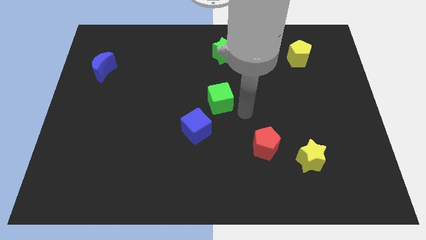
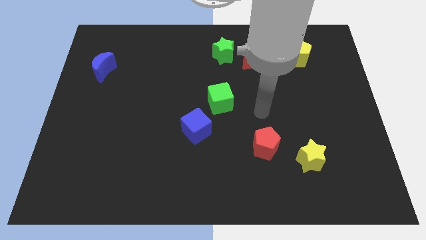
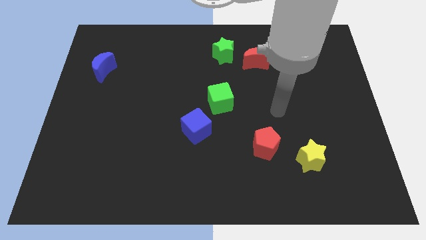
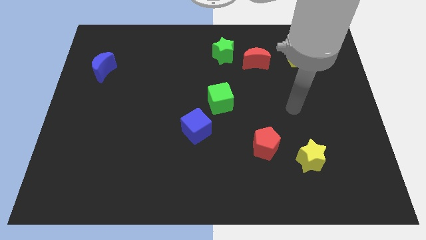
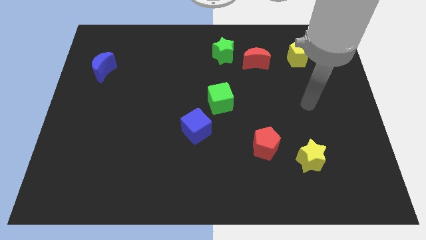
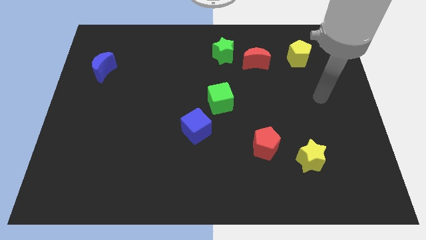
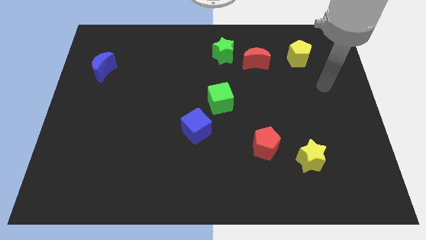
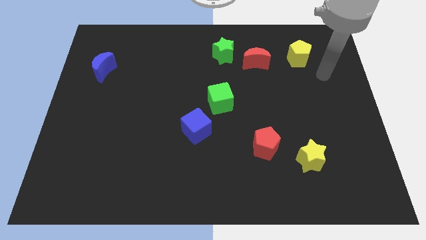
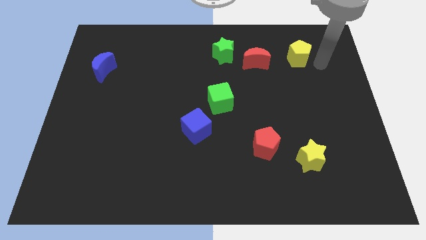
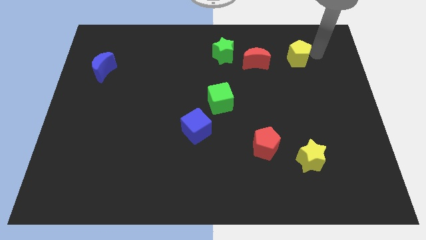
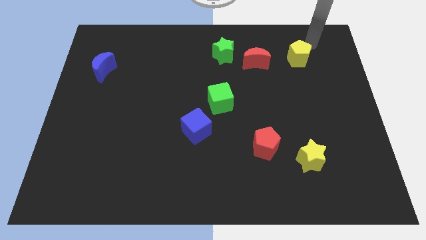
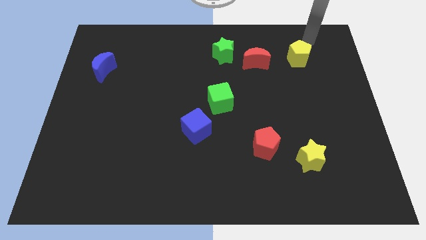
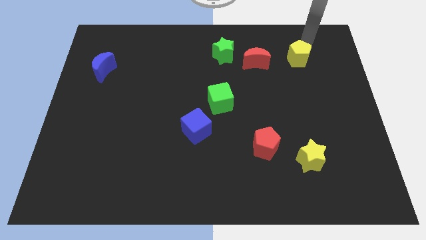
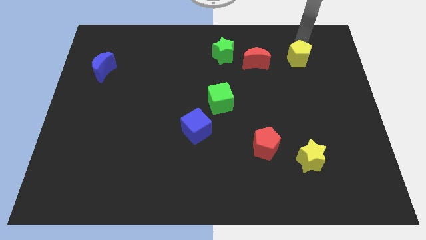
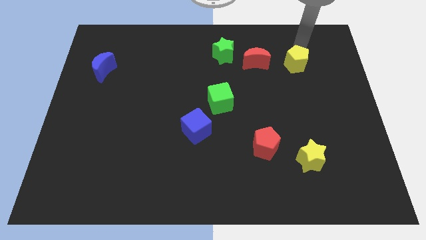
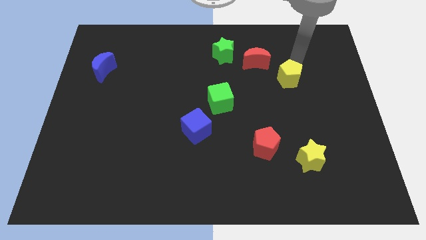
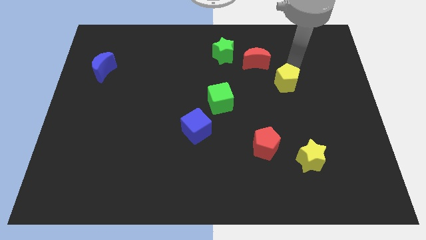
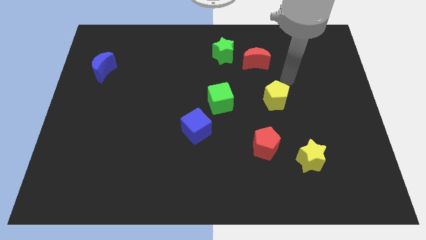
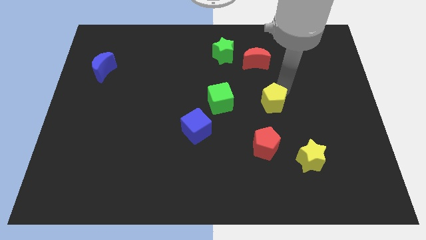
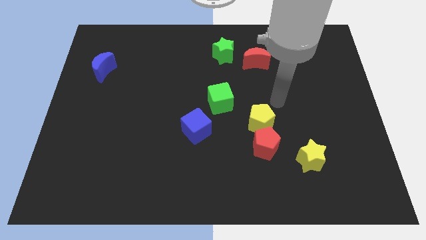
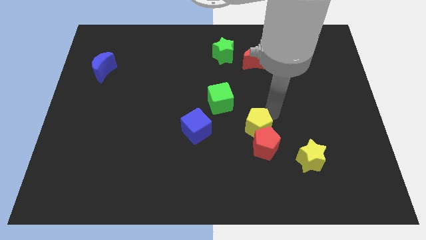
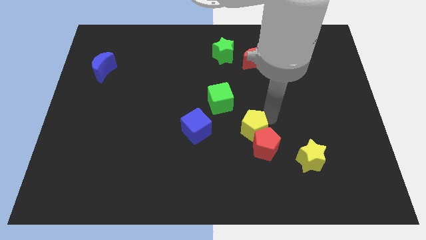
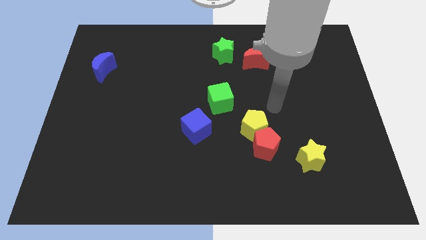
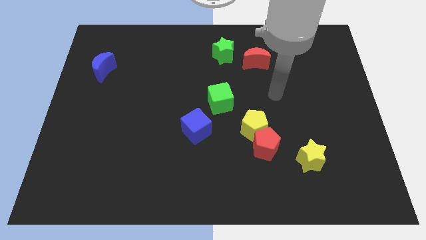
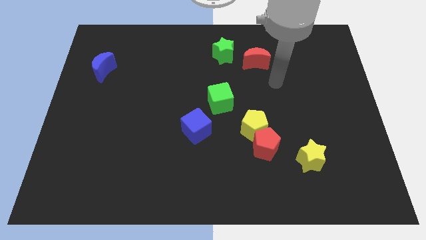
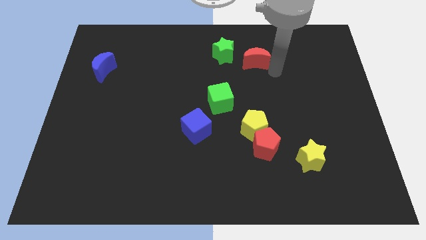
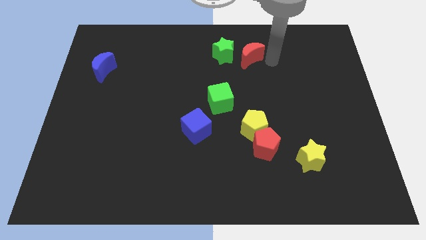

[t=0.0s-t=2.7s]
move the yellow pentagon close to the red pentagon and go away

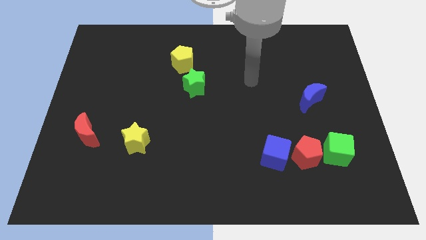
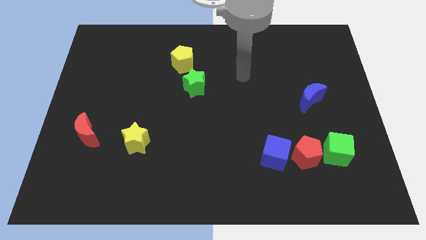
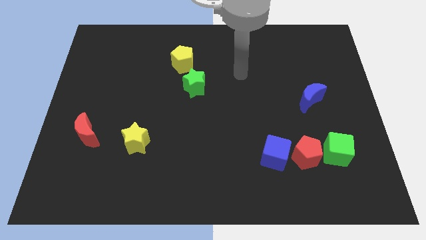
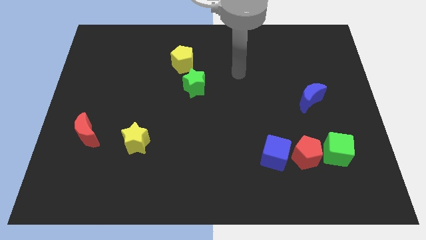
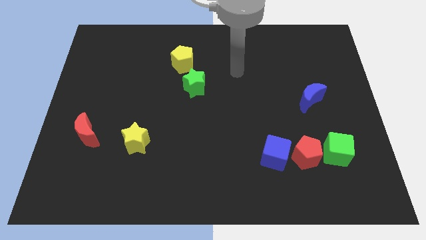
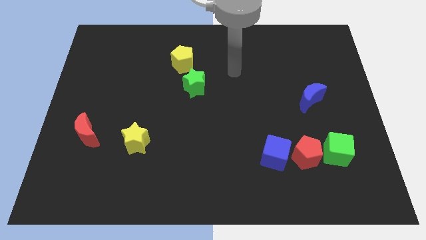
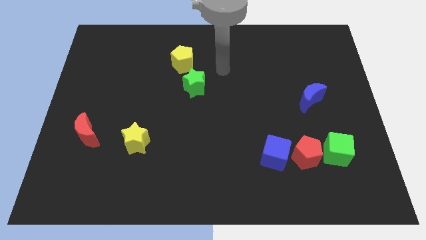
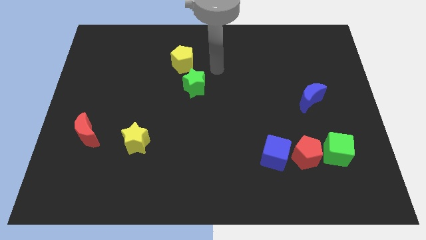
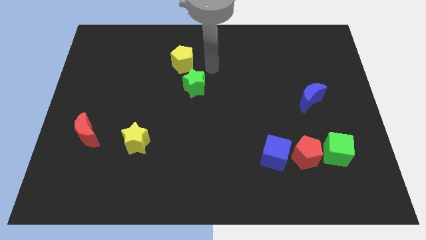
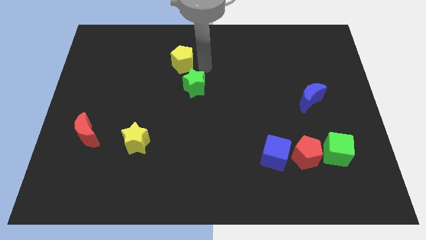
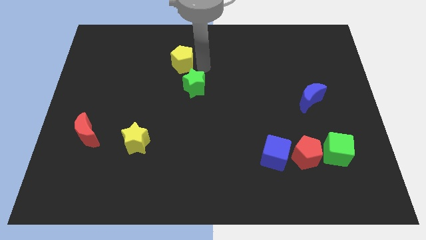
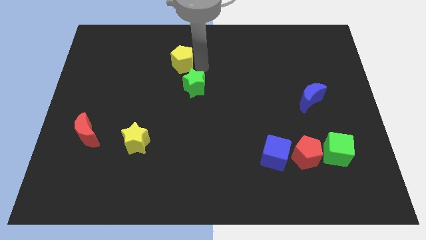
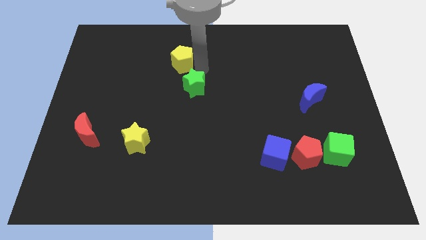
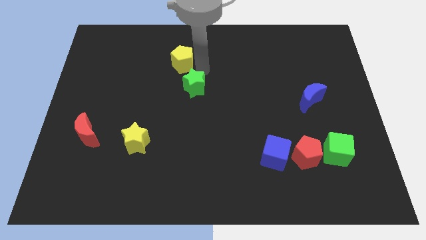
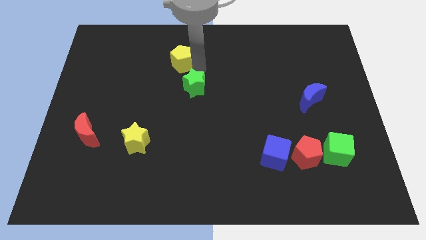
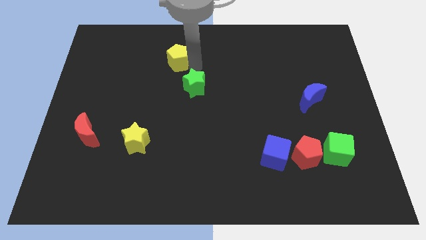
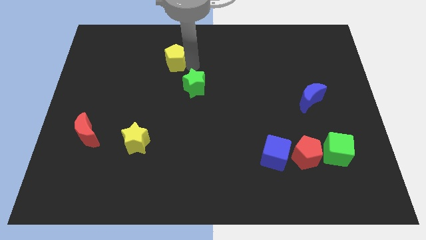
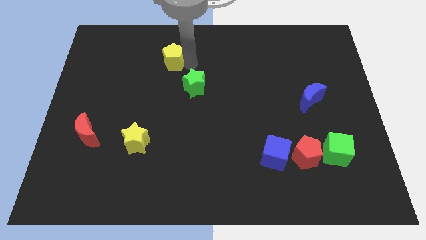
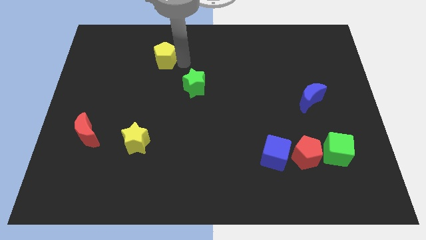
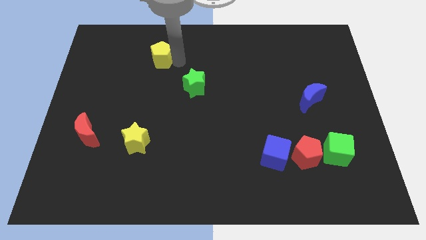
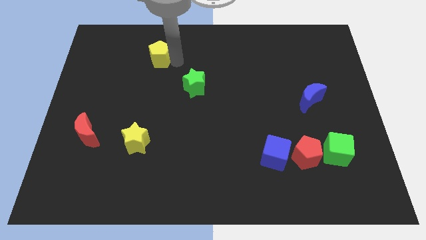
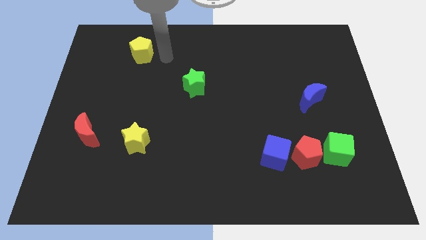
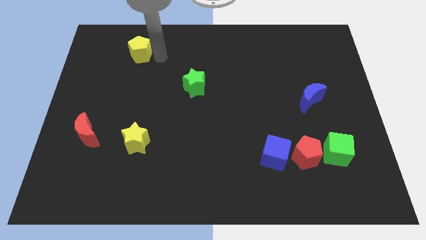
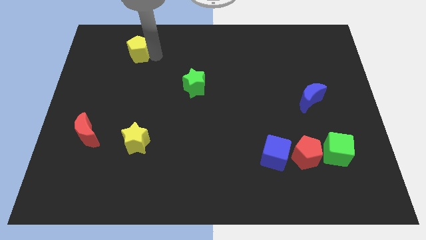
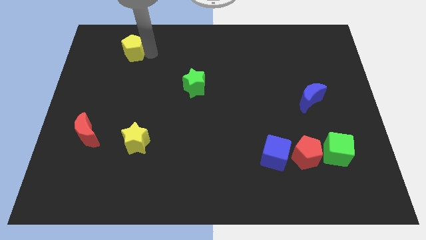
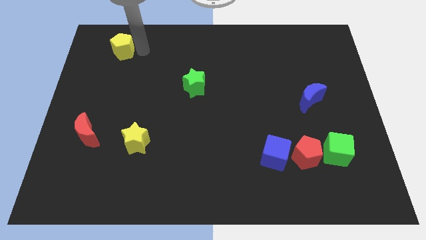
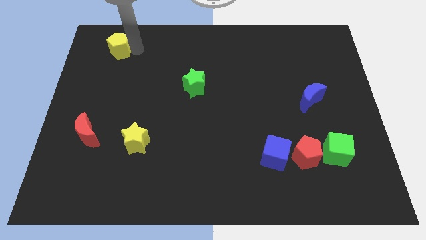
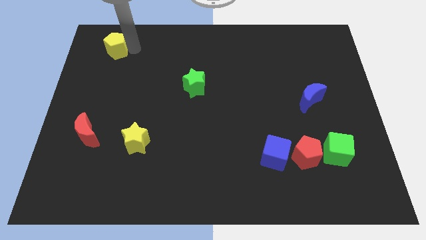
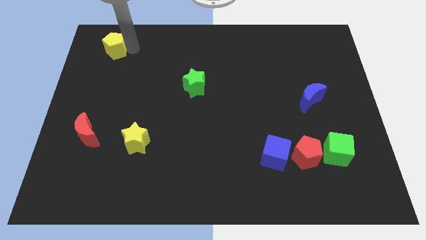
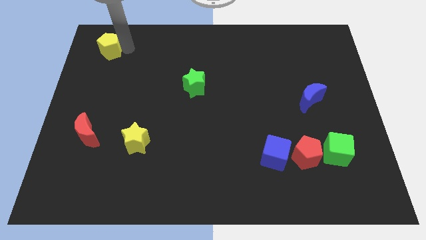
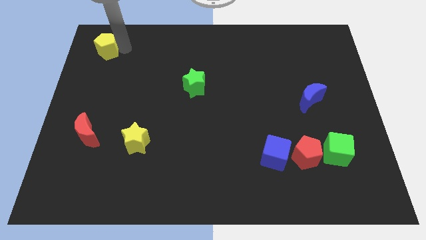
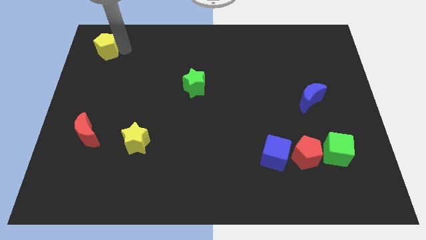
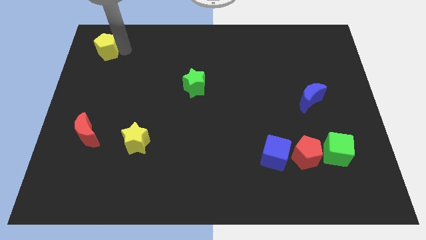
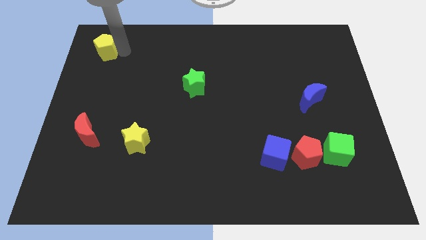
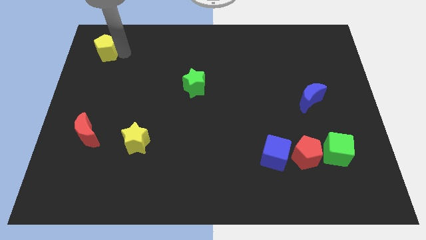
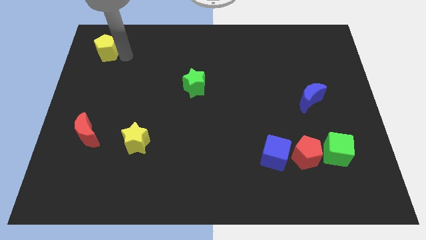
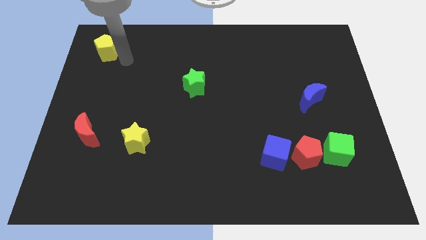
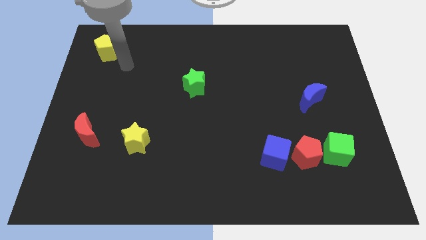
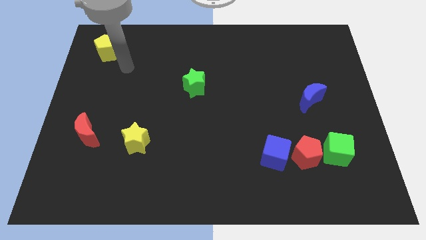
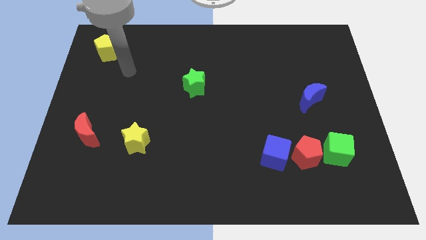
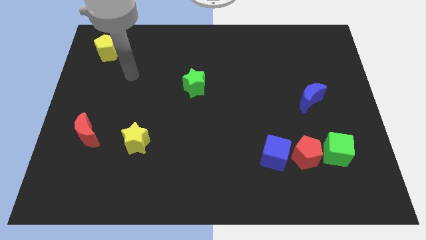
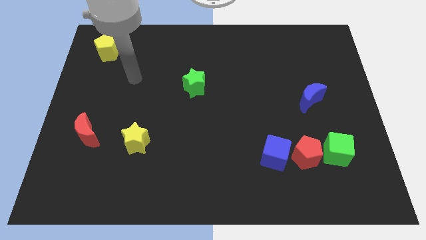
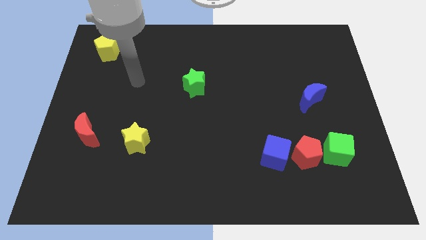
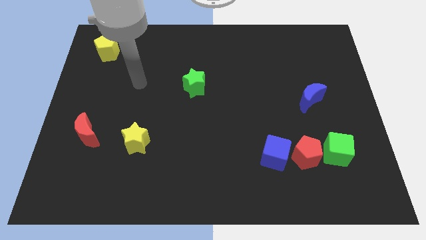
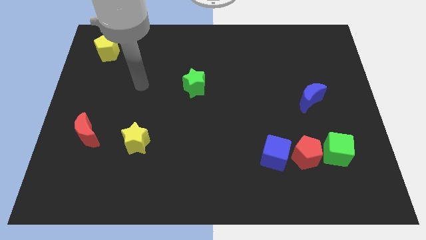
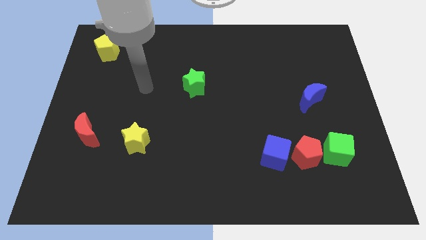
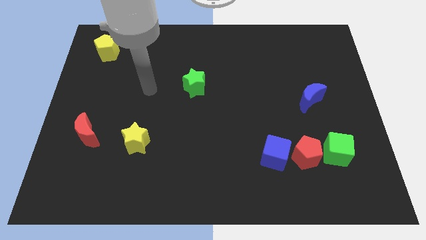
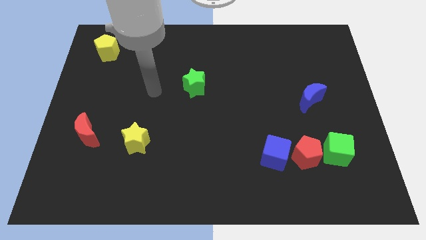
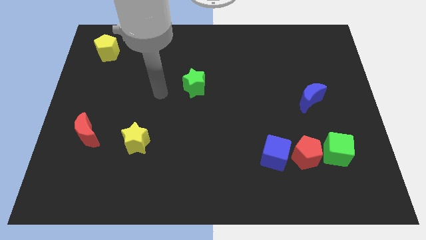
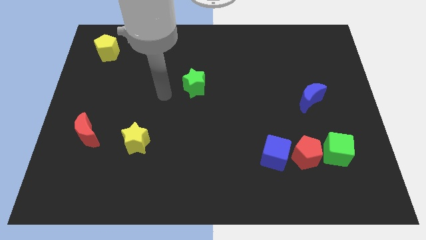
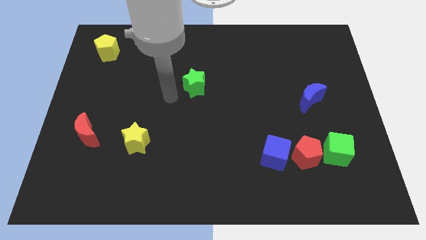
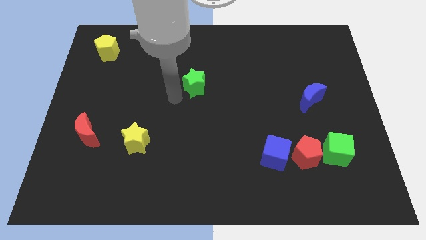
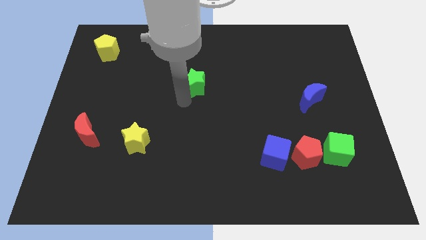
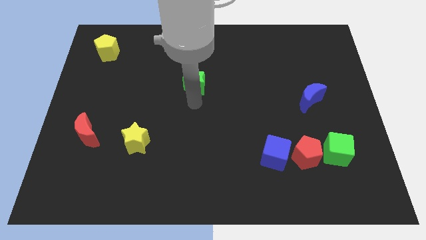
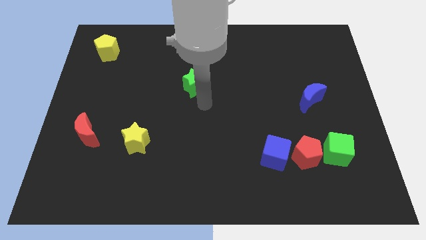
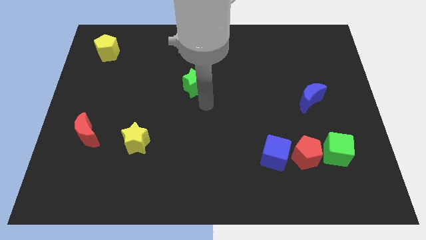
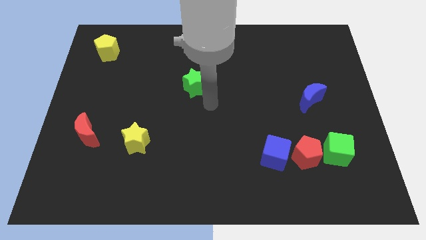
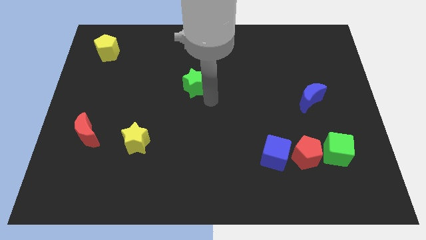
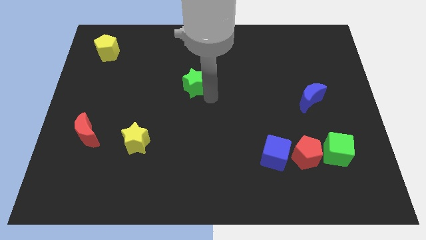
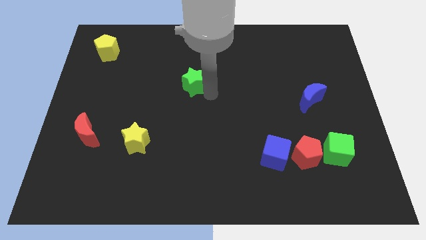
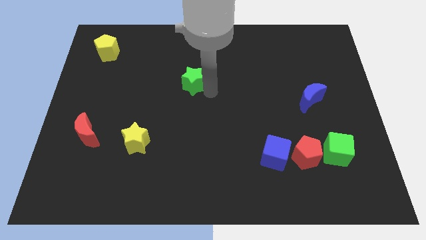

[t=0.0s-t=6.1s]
separate yellow pentagon from the green star

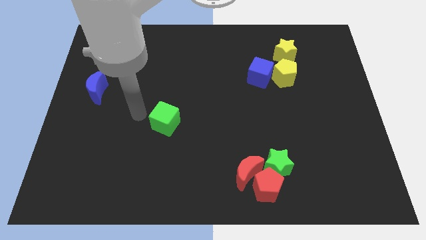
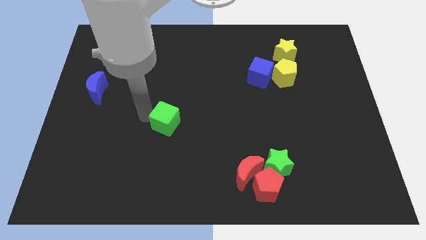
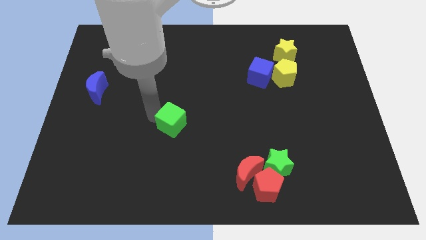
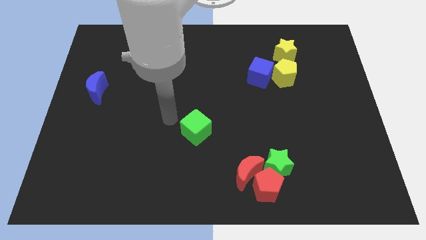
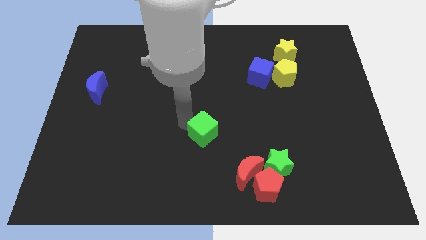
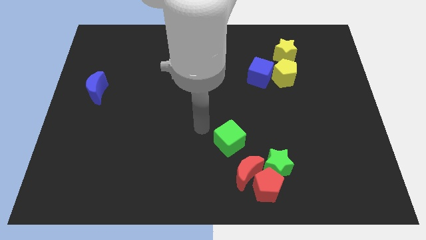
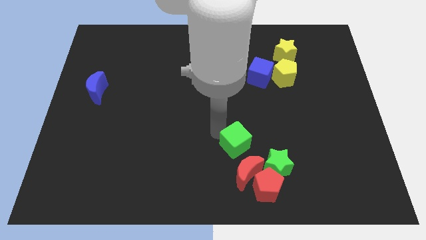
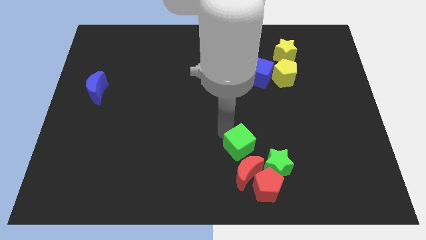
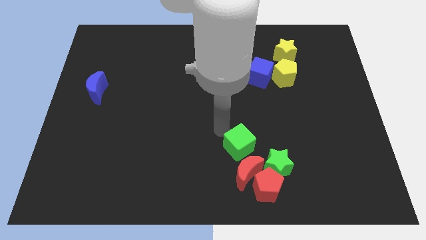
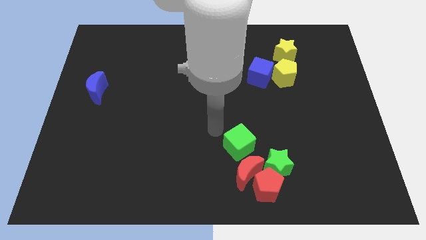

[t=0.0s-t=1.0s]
put the green cube to the top left side of the red crescent
